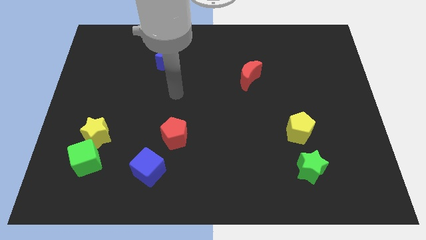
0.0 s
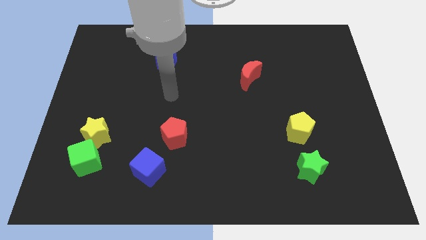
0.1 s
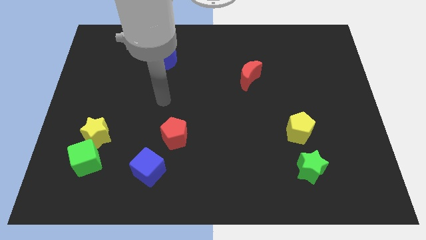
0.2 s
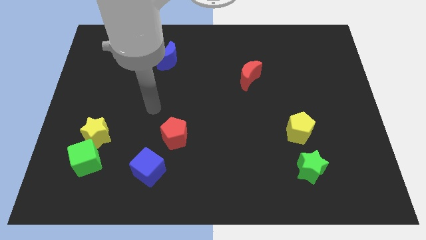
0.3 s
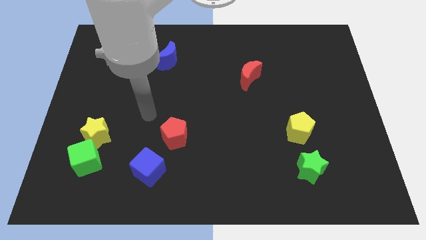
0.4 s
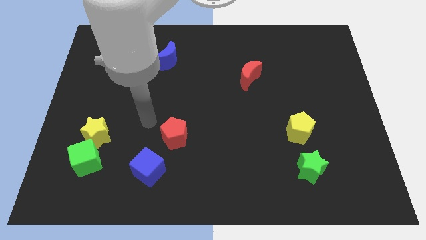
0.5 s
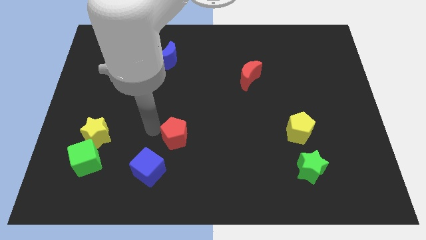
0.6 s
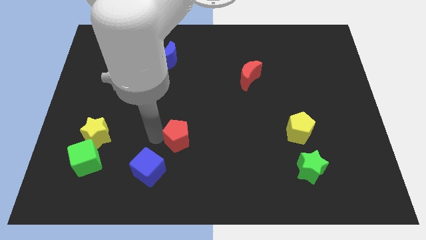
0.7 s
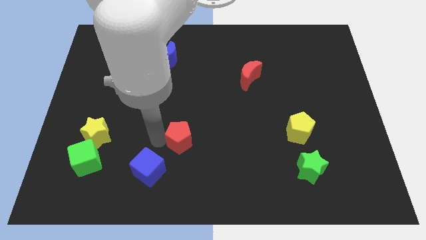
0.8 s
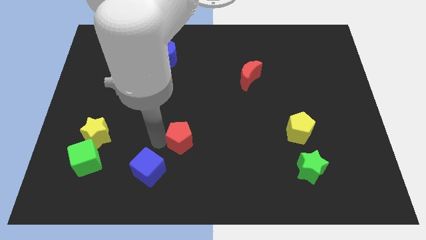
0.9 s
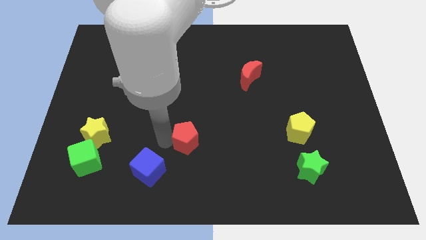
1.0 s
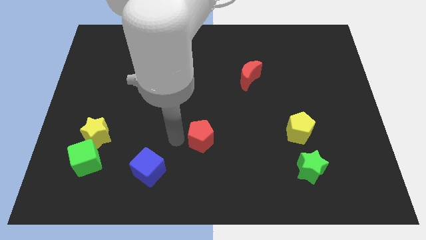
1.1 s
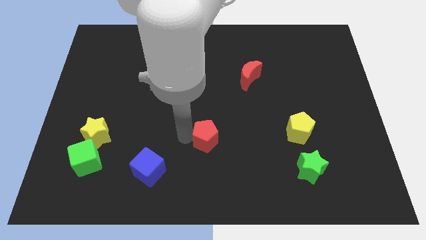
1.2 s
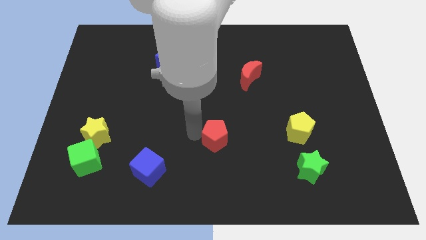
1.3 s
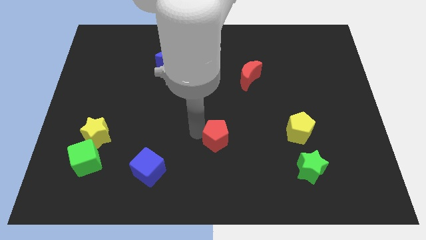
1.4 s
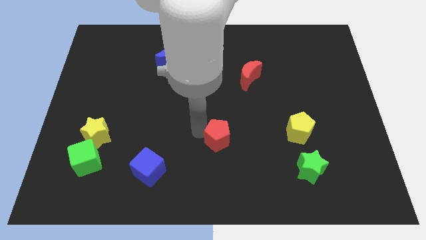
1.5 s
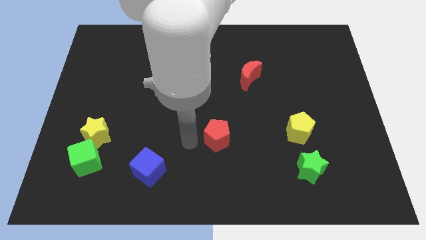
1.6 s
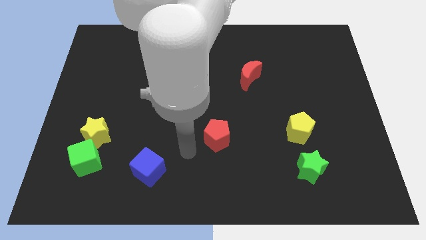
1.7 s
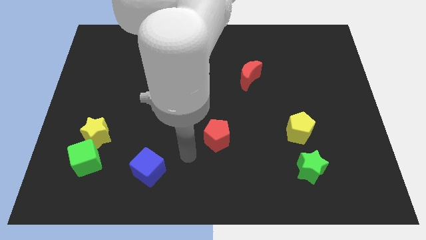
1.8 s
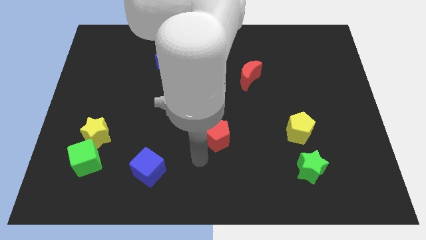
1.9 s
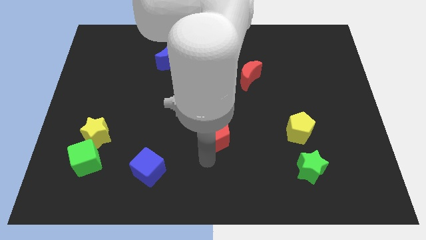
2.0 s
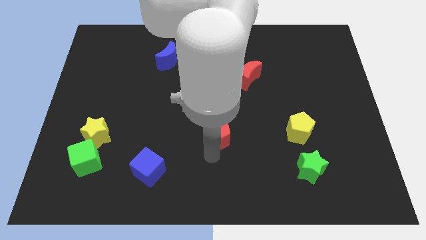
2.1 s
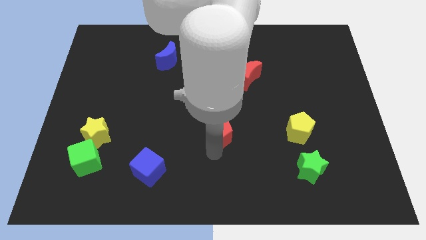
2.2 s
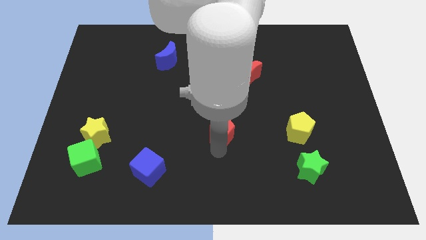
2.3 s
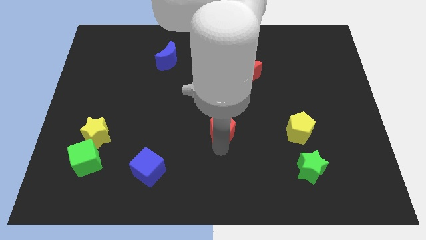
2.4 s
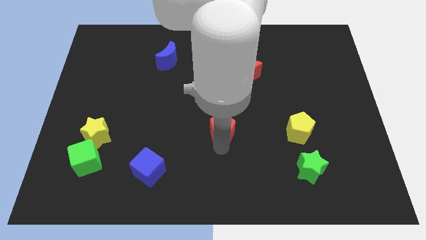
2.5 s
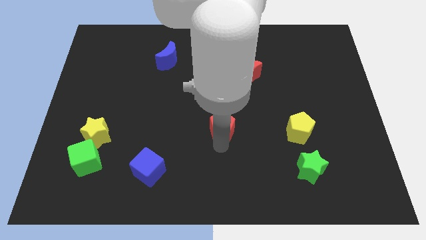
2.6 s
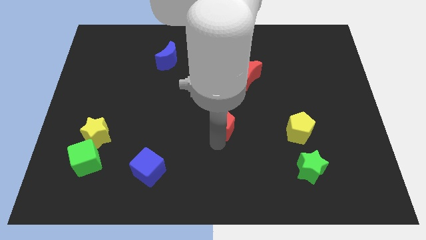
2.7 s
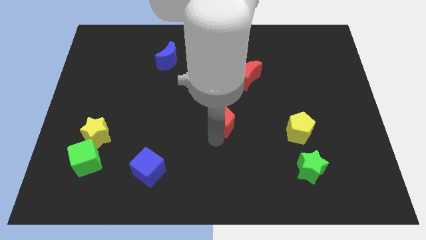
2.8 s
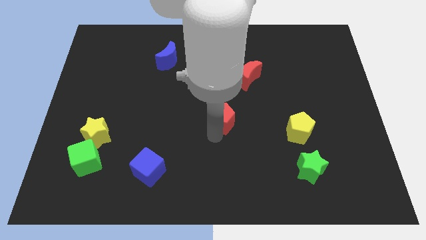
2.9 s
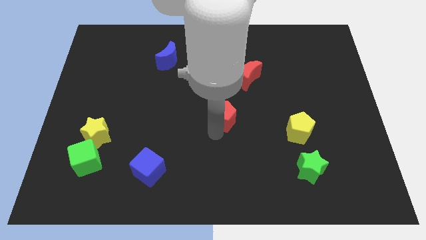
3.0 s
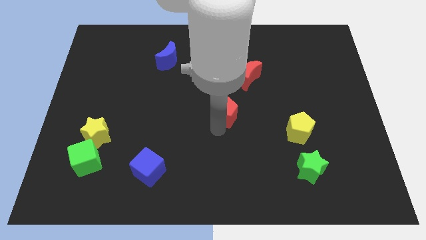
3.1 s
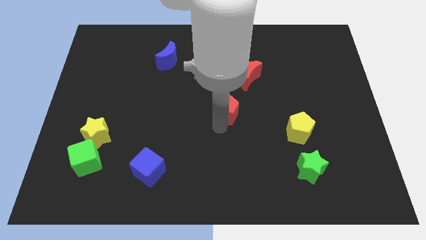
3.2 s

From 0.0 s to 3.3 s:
separate red pentagon from blue cube

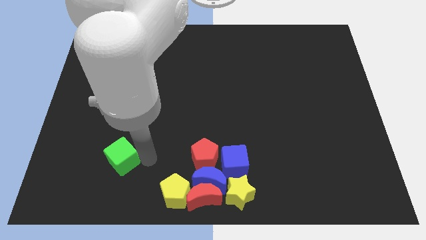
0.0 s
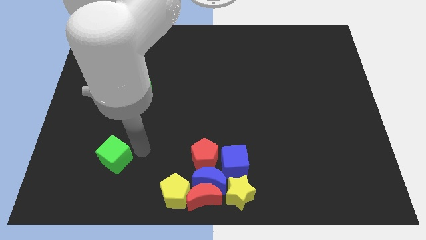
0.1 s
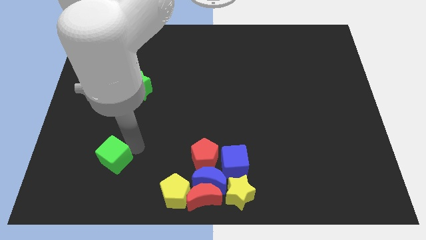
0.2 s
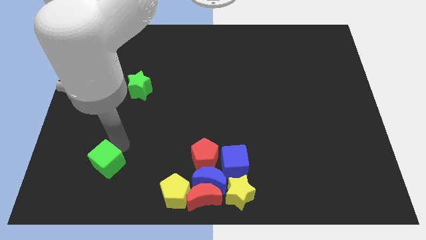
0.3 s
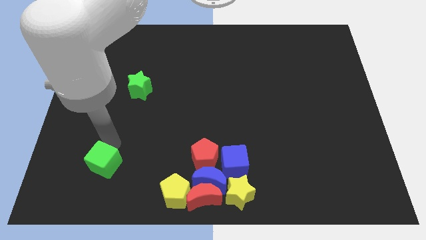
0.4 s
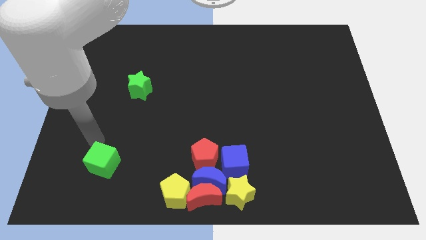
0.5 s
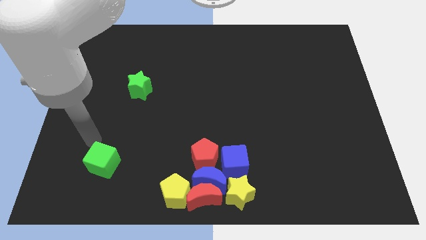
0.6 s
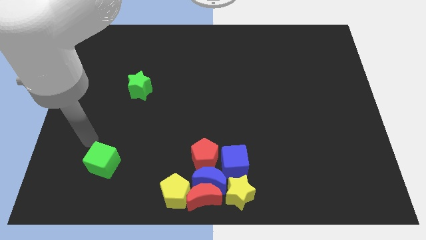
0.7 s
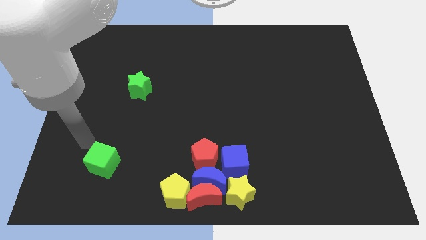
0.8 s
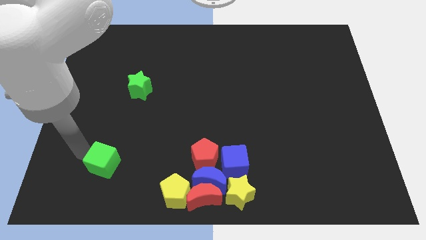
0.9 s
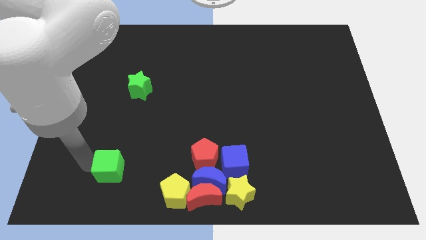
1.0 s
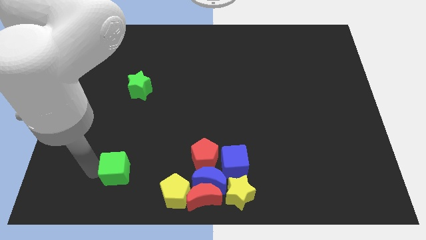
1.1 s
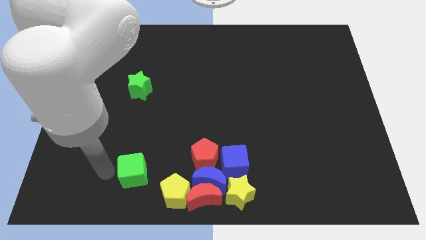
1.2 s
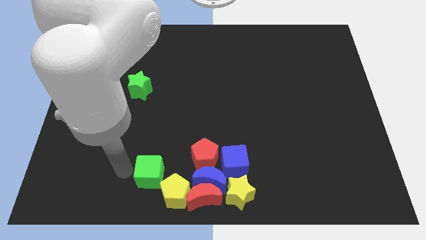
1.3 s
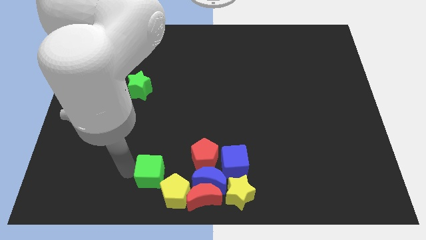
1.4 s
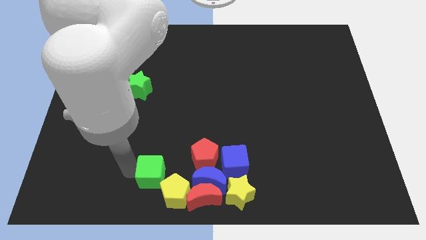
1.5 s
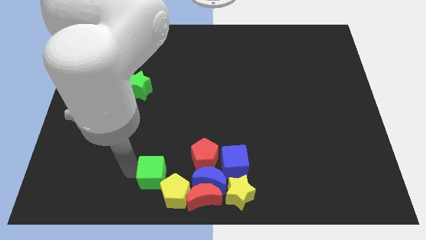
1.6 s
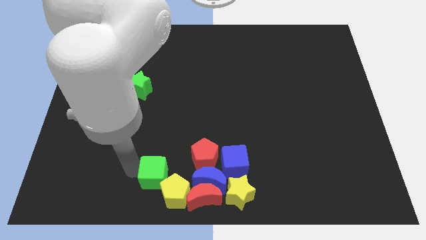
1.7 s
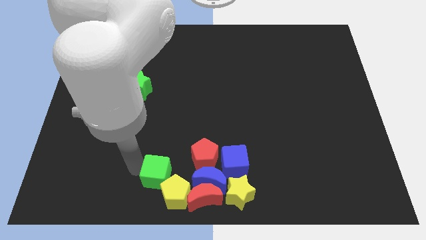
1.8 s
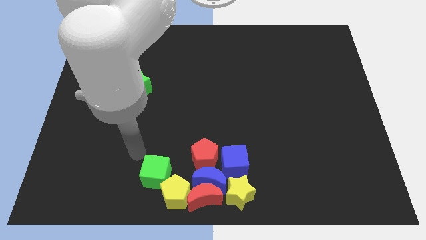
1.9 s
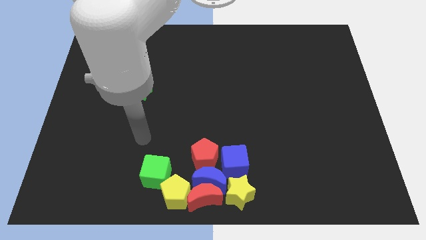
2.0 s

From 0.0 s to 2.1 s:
place the green cube ahead left to the yellow pentagon

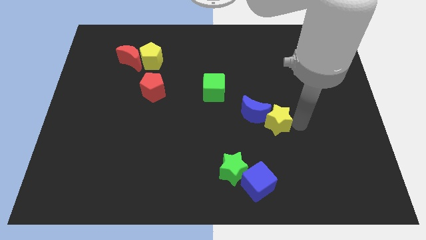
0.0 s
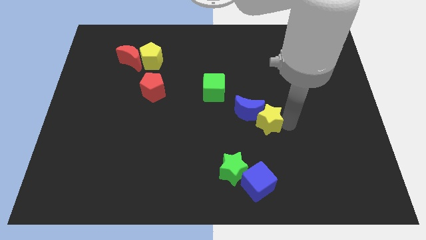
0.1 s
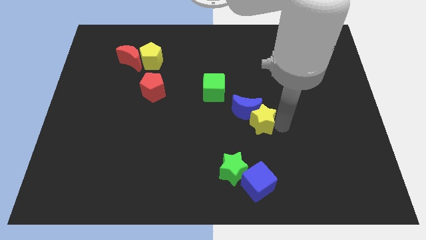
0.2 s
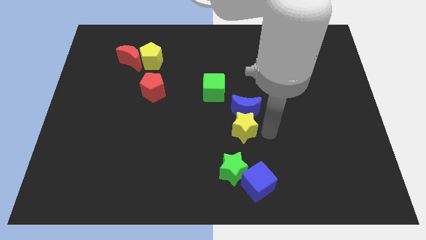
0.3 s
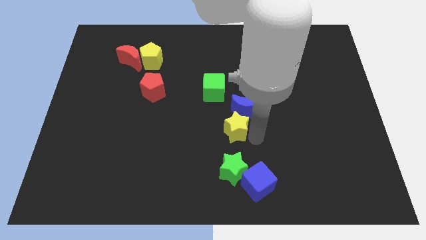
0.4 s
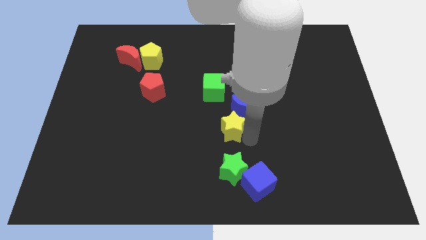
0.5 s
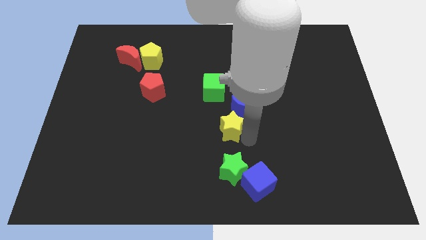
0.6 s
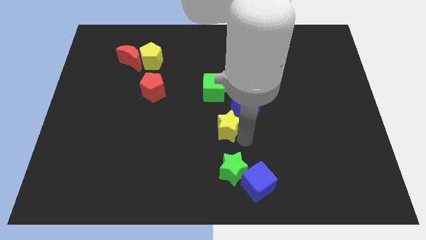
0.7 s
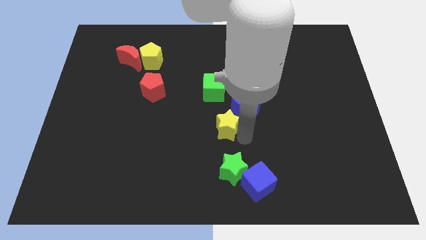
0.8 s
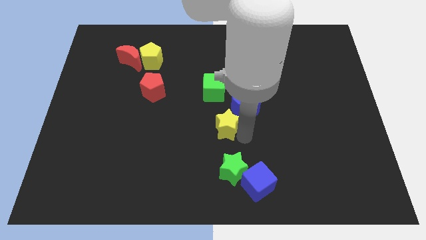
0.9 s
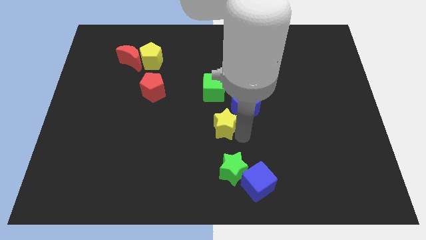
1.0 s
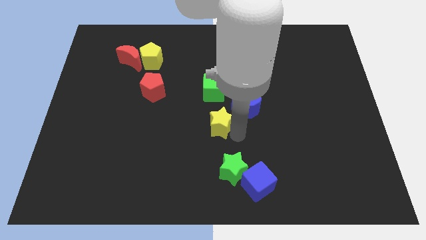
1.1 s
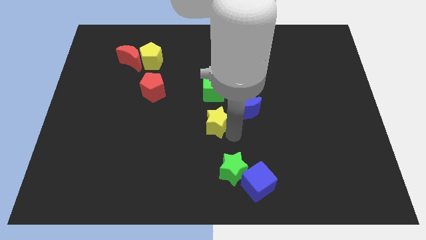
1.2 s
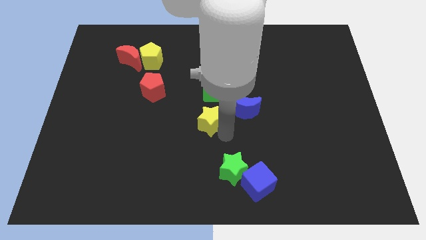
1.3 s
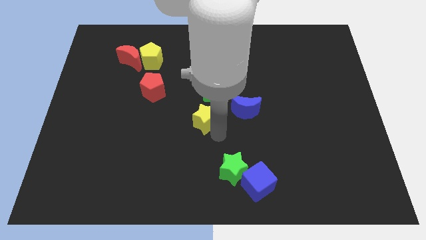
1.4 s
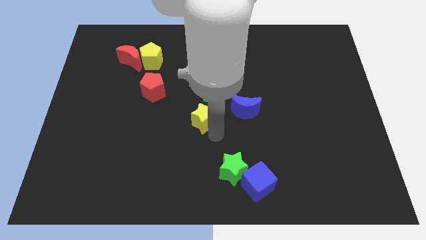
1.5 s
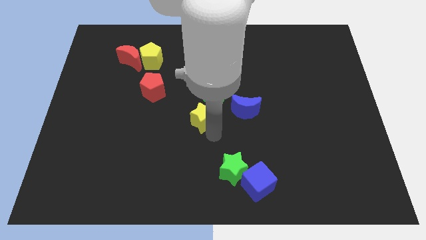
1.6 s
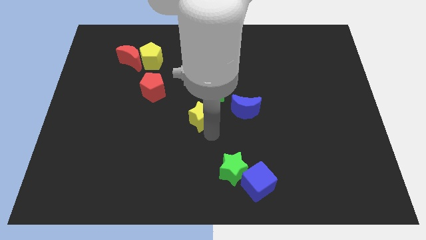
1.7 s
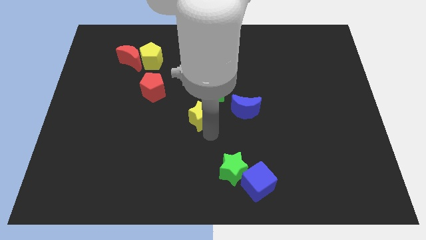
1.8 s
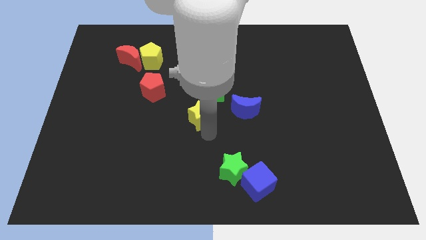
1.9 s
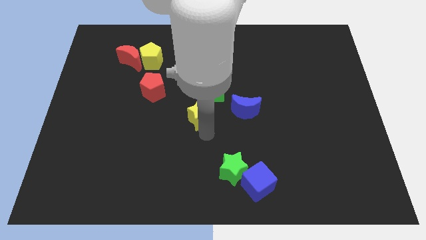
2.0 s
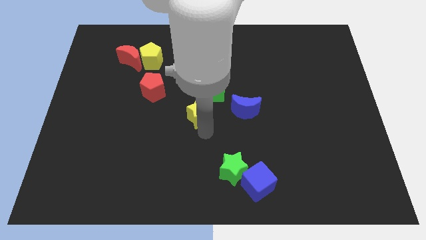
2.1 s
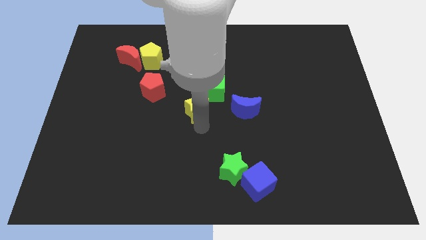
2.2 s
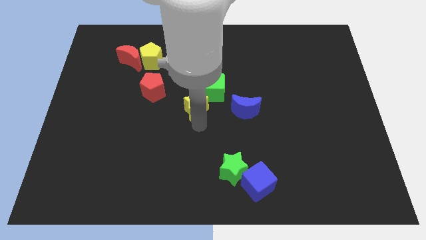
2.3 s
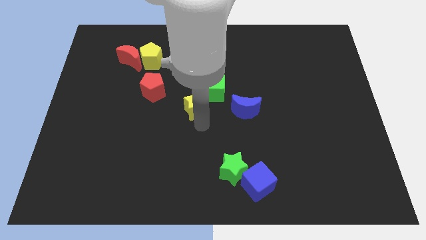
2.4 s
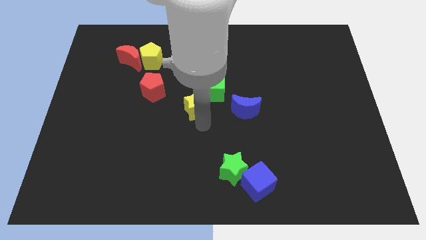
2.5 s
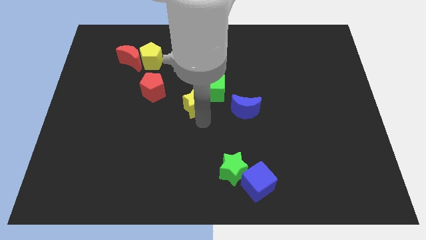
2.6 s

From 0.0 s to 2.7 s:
push the yellow star to the bottom left of the green cube

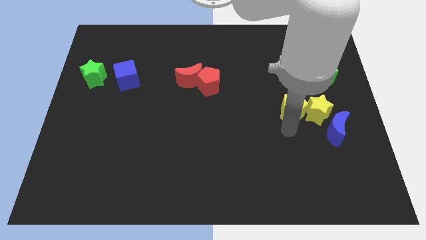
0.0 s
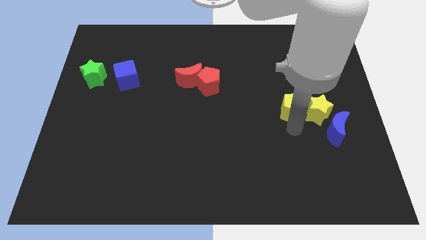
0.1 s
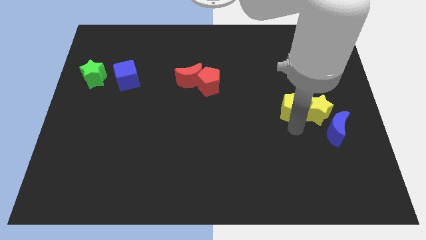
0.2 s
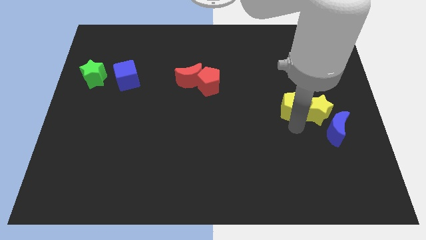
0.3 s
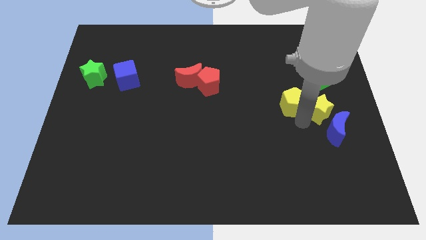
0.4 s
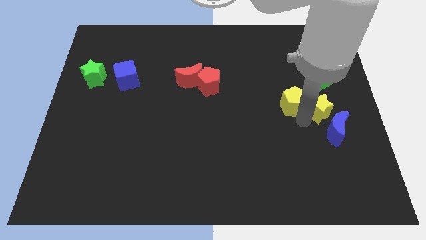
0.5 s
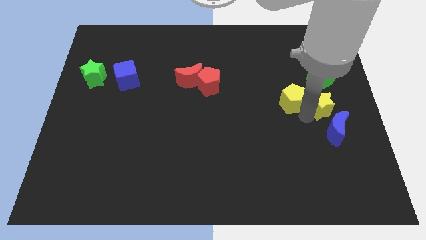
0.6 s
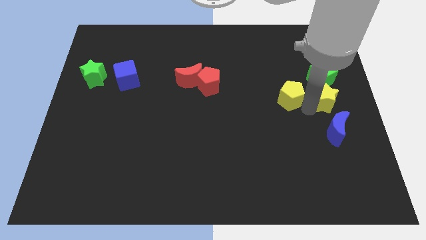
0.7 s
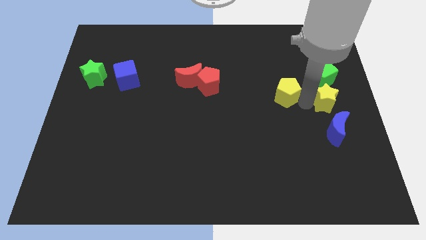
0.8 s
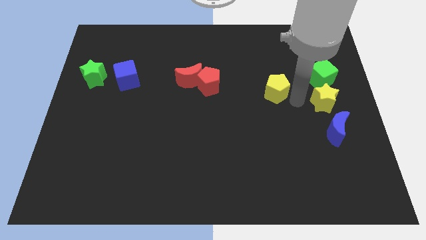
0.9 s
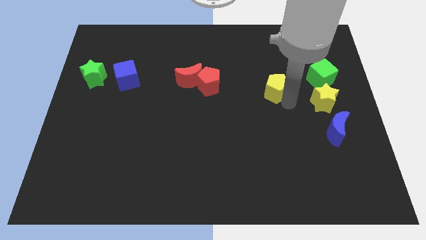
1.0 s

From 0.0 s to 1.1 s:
separate yellow pentagon from yellow star
